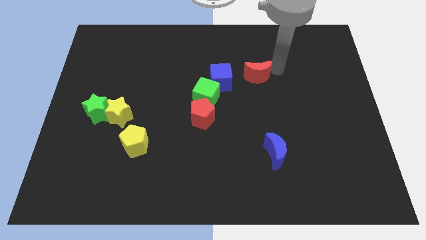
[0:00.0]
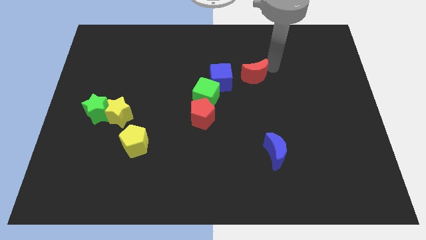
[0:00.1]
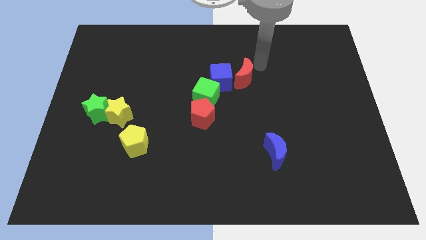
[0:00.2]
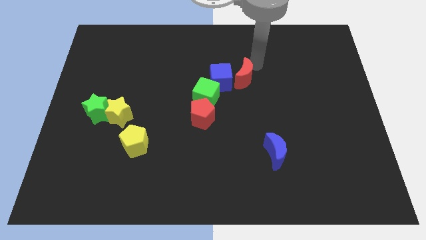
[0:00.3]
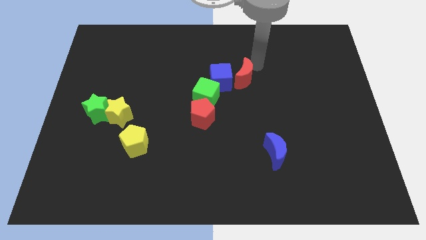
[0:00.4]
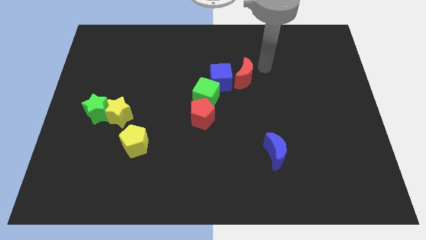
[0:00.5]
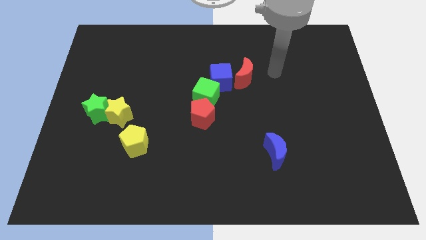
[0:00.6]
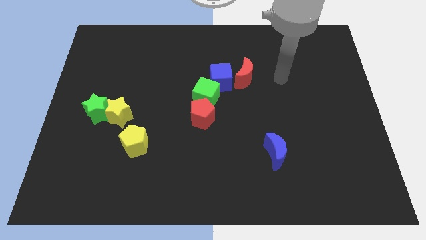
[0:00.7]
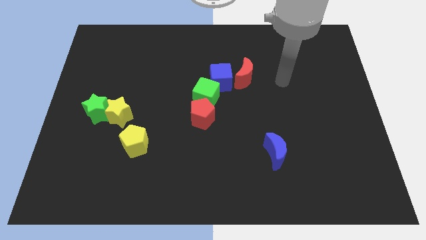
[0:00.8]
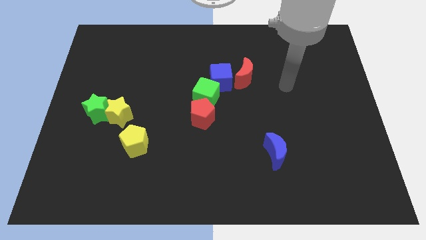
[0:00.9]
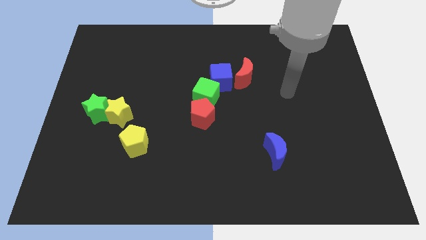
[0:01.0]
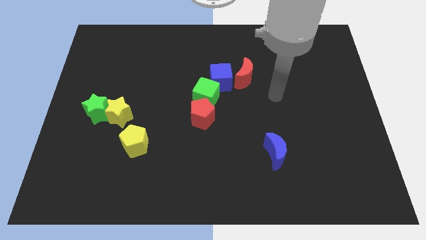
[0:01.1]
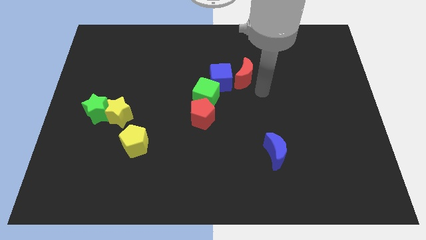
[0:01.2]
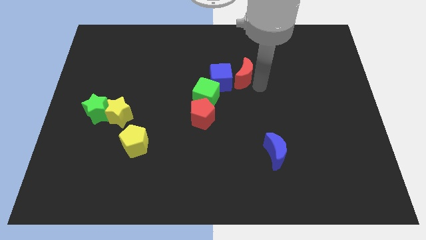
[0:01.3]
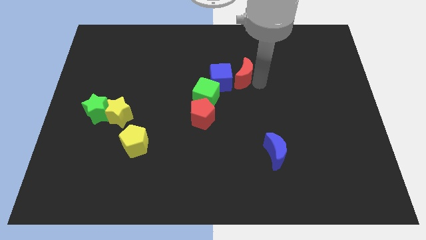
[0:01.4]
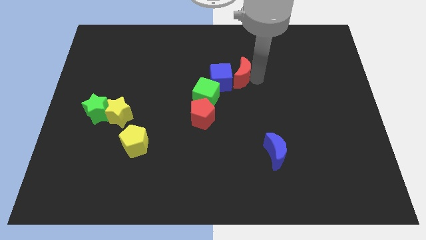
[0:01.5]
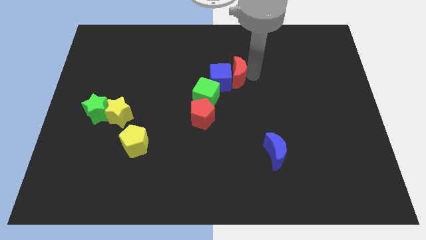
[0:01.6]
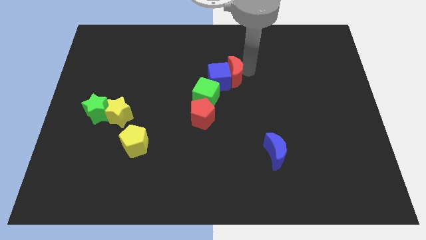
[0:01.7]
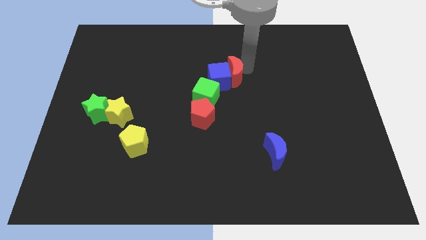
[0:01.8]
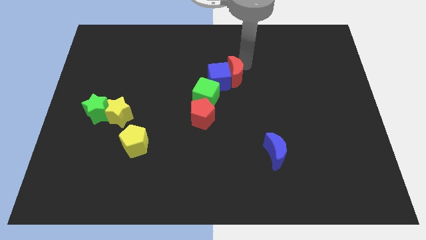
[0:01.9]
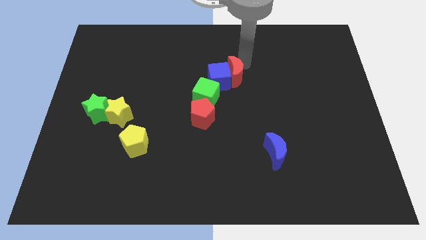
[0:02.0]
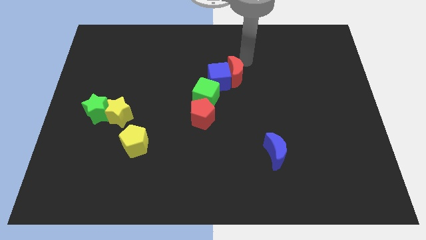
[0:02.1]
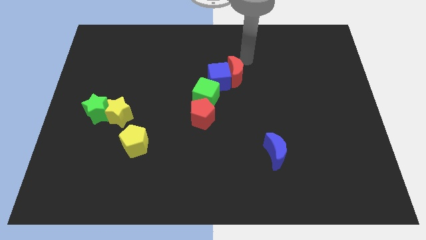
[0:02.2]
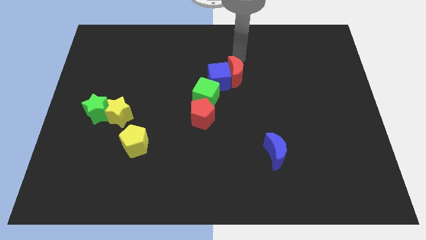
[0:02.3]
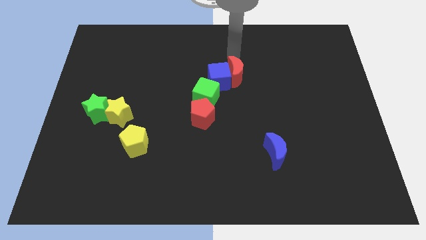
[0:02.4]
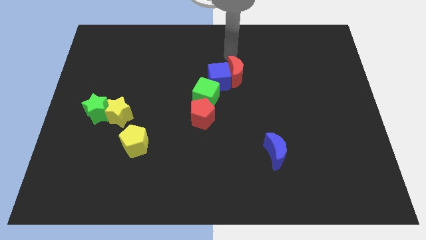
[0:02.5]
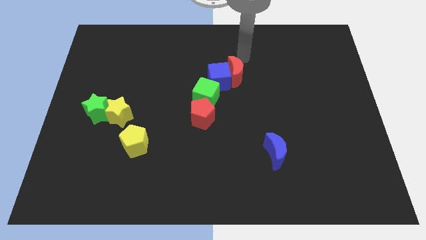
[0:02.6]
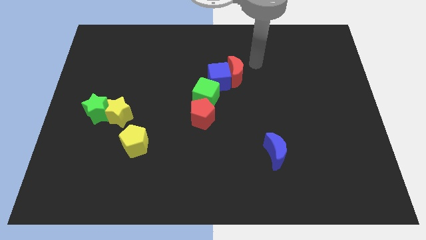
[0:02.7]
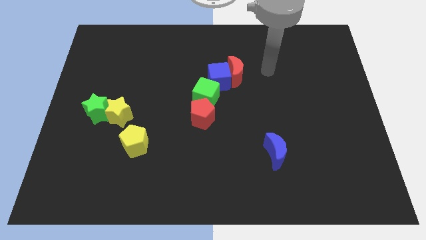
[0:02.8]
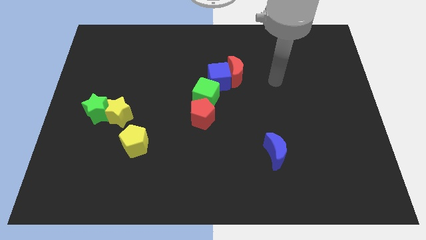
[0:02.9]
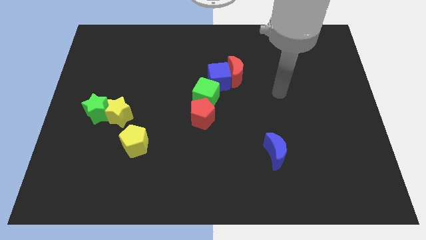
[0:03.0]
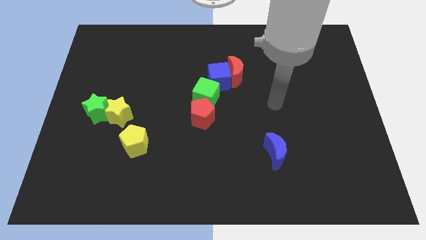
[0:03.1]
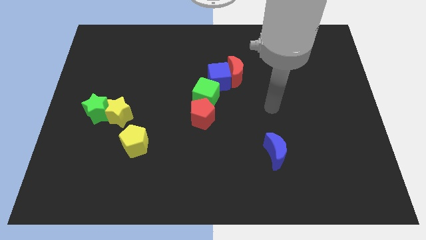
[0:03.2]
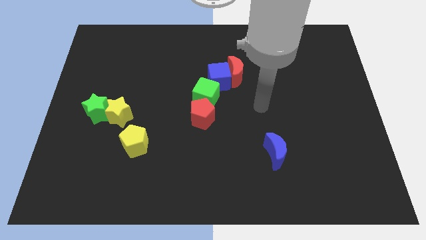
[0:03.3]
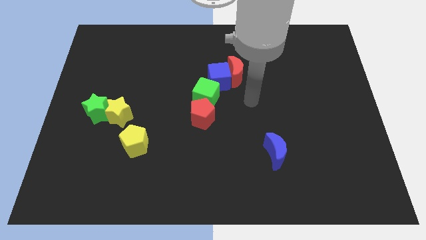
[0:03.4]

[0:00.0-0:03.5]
push the red moon into the blue cube

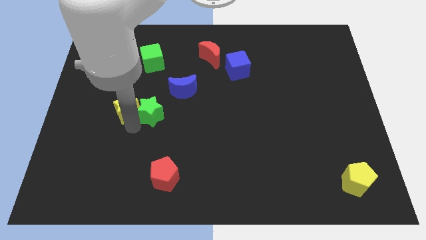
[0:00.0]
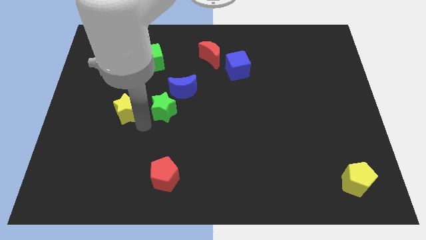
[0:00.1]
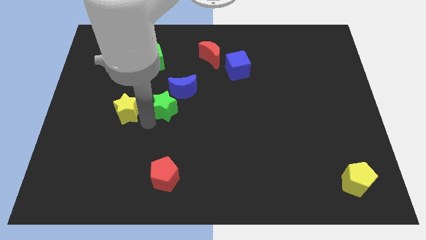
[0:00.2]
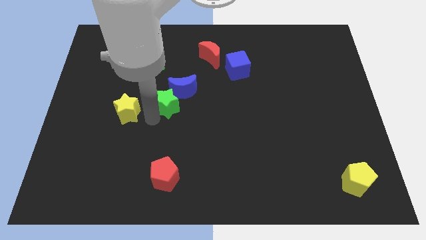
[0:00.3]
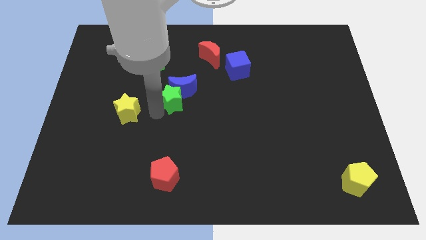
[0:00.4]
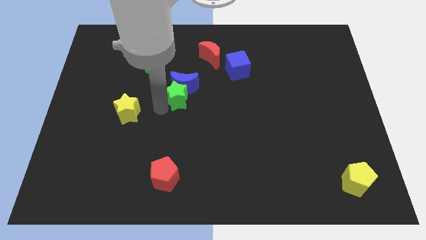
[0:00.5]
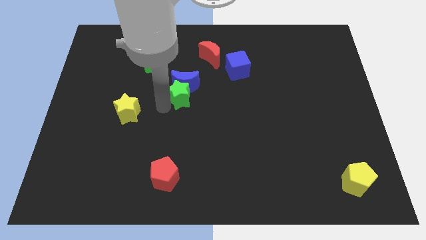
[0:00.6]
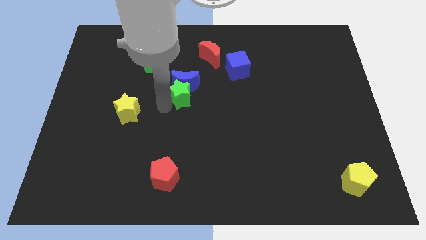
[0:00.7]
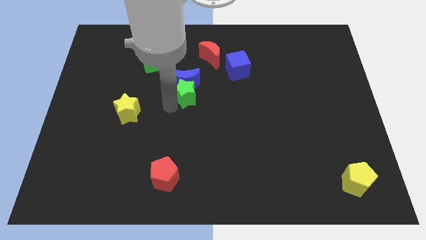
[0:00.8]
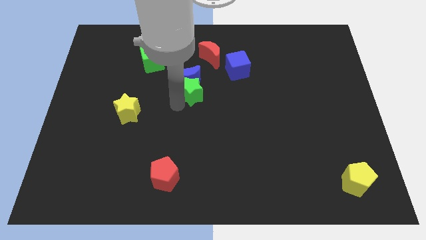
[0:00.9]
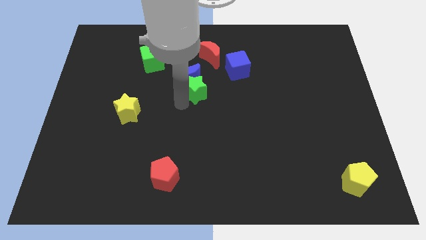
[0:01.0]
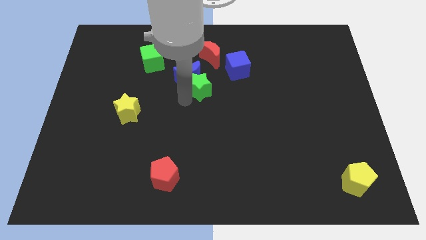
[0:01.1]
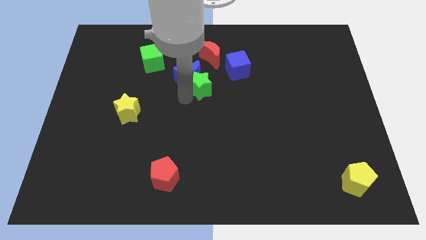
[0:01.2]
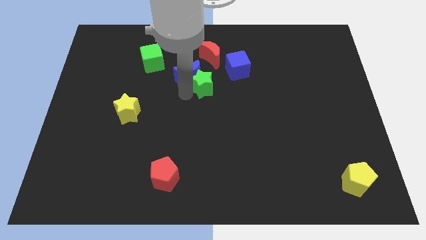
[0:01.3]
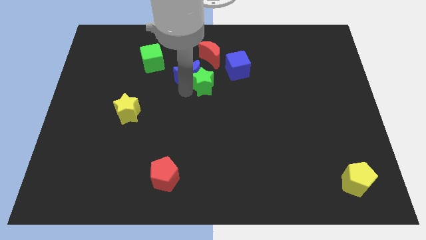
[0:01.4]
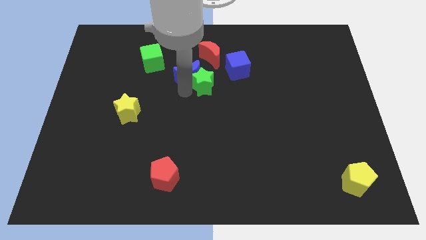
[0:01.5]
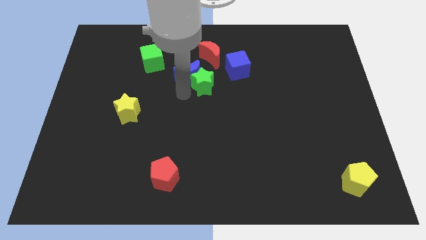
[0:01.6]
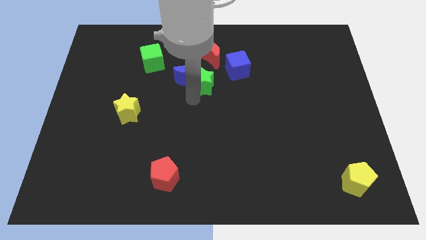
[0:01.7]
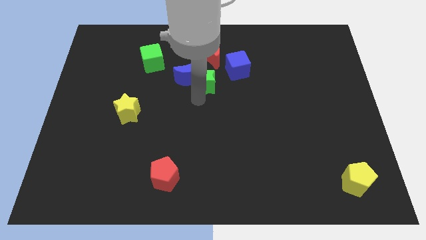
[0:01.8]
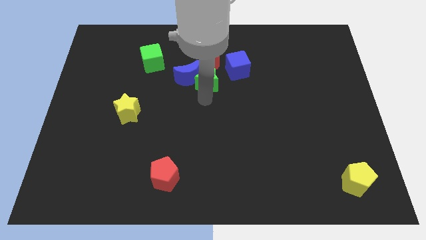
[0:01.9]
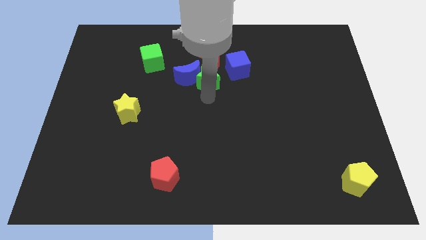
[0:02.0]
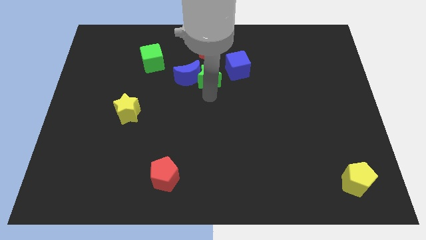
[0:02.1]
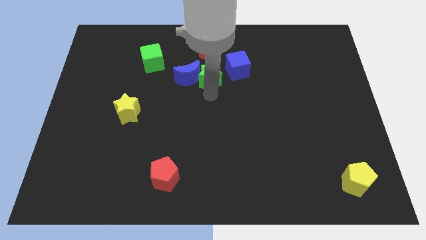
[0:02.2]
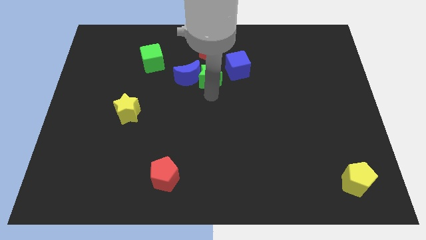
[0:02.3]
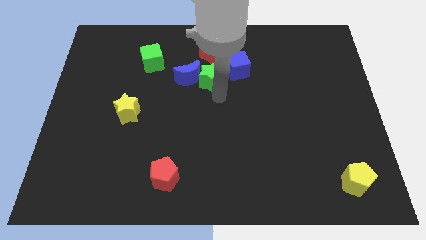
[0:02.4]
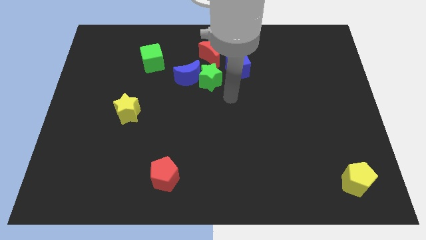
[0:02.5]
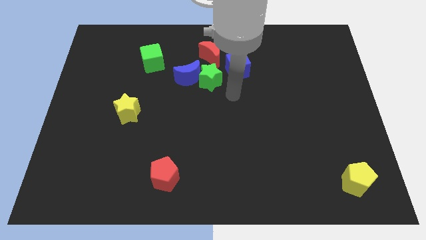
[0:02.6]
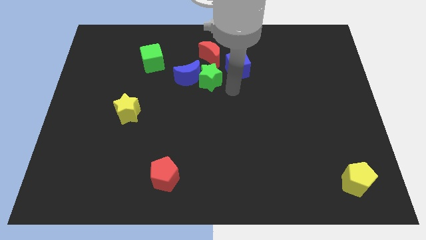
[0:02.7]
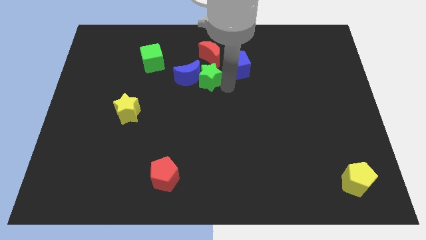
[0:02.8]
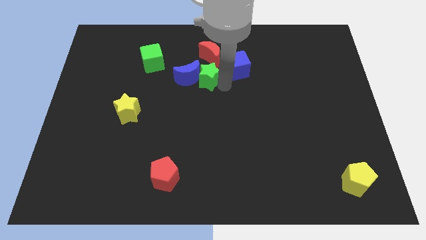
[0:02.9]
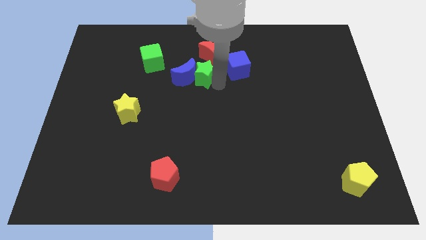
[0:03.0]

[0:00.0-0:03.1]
push the blue moon and green star towards the top side of the board

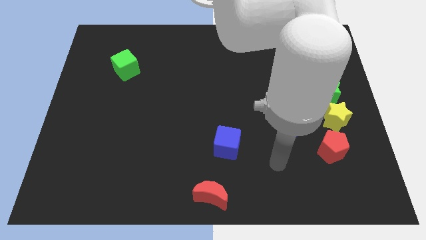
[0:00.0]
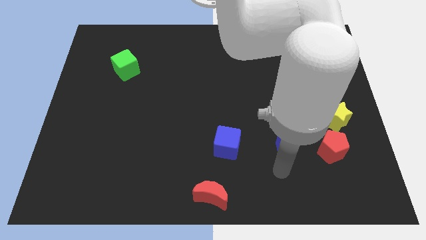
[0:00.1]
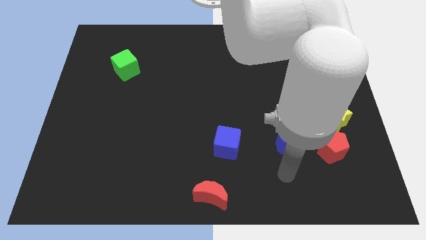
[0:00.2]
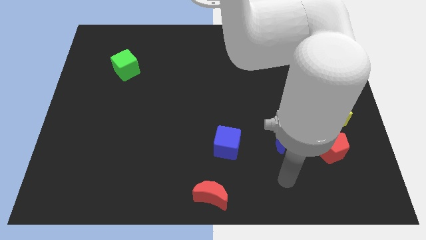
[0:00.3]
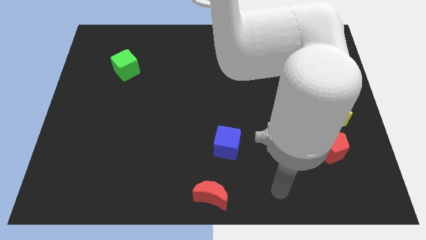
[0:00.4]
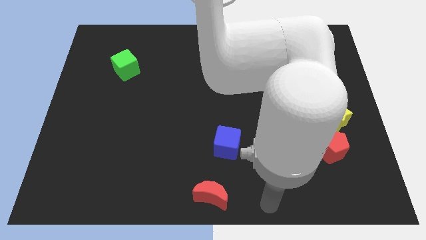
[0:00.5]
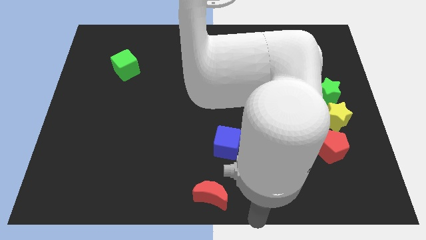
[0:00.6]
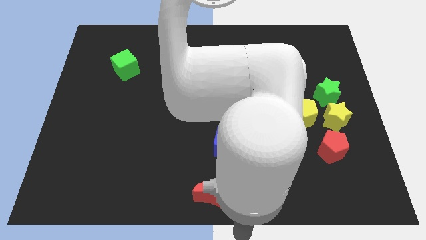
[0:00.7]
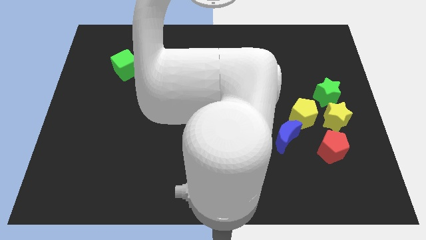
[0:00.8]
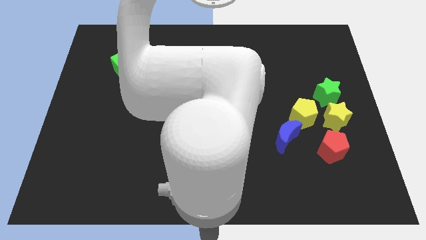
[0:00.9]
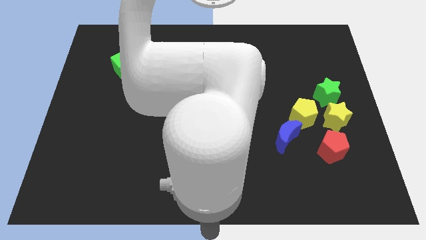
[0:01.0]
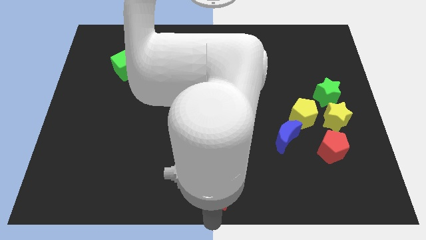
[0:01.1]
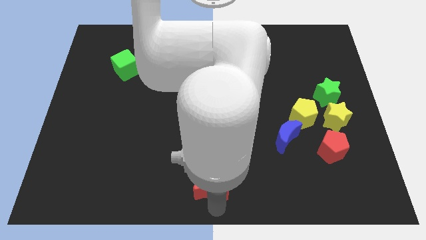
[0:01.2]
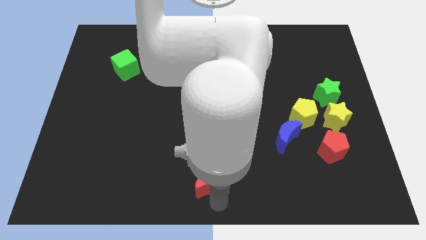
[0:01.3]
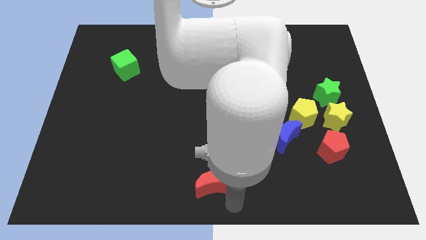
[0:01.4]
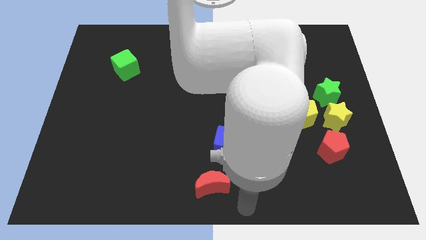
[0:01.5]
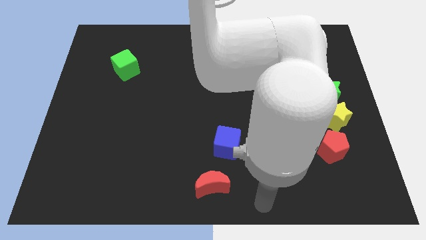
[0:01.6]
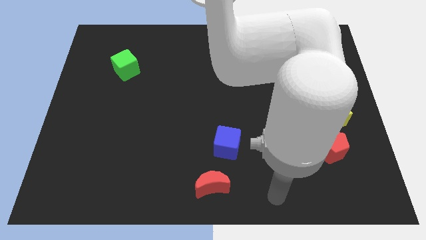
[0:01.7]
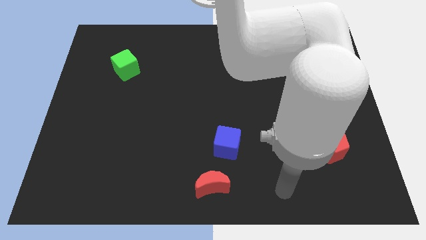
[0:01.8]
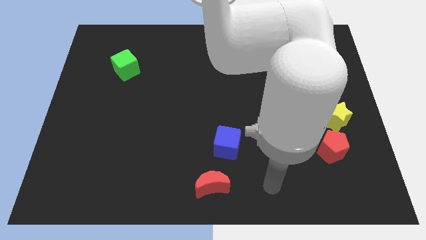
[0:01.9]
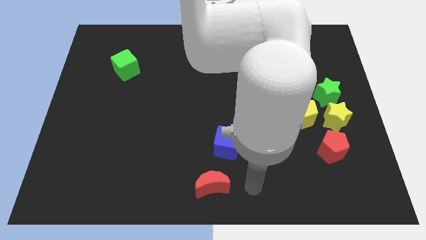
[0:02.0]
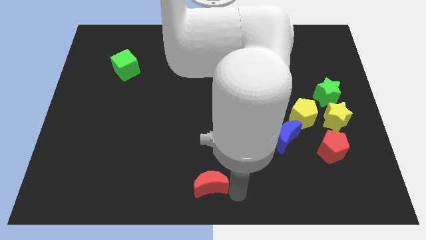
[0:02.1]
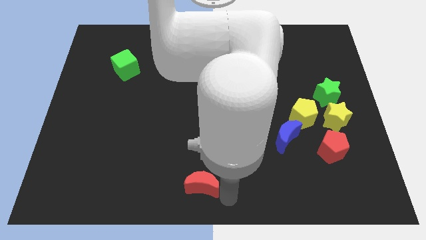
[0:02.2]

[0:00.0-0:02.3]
push the red moon slightly up
